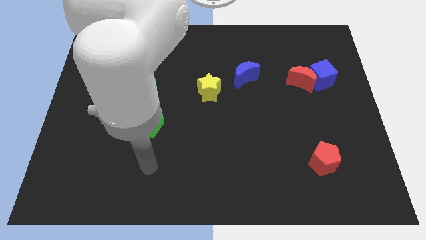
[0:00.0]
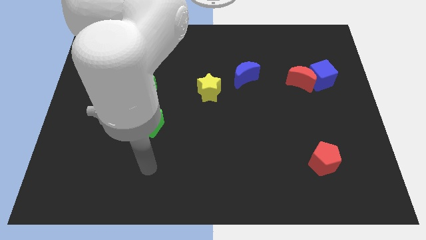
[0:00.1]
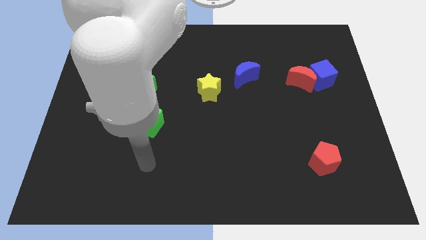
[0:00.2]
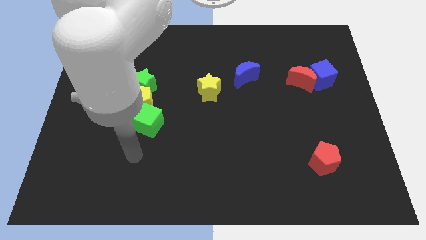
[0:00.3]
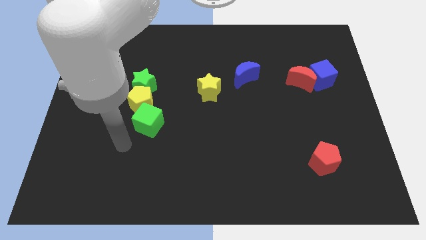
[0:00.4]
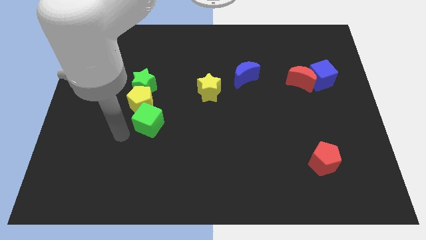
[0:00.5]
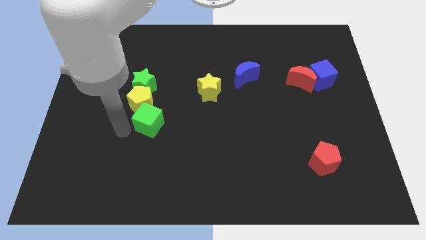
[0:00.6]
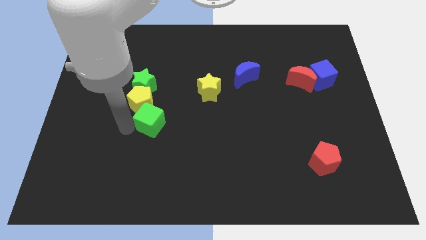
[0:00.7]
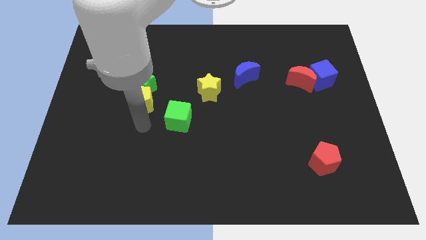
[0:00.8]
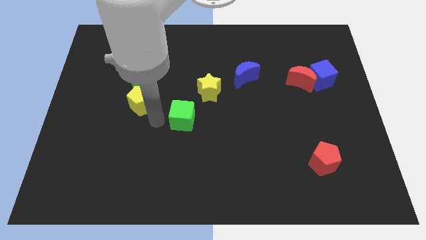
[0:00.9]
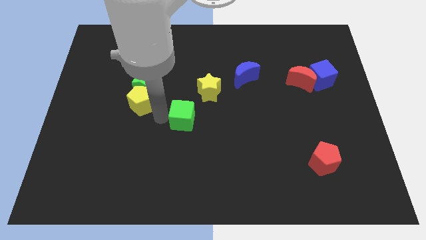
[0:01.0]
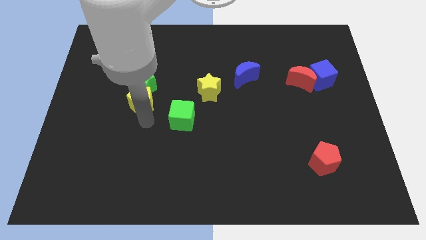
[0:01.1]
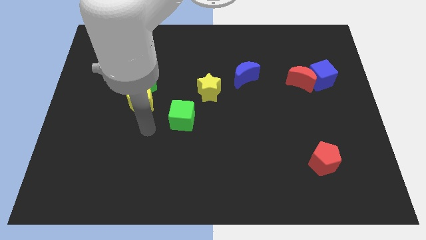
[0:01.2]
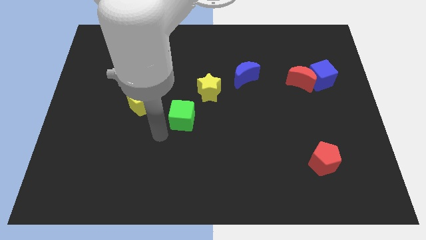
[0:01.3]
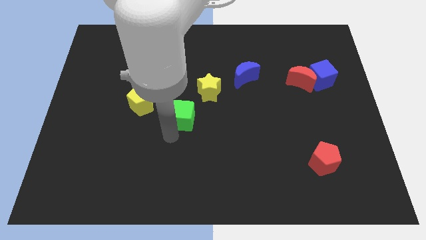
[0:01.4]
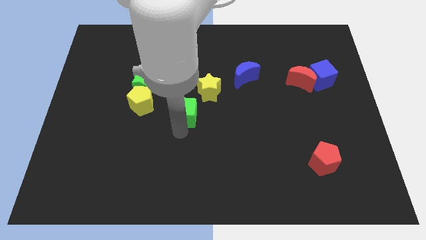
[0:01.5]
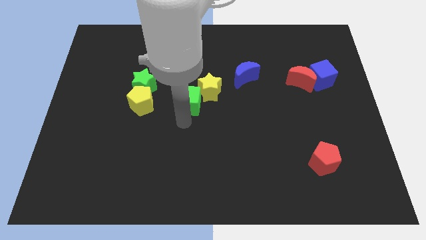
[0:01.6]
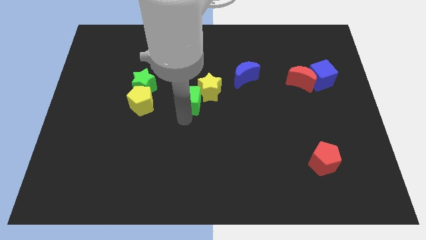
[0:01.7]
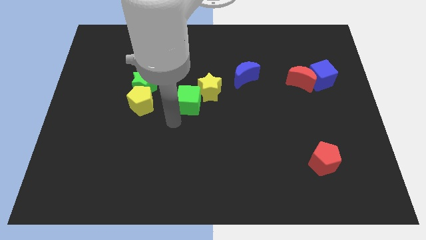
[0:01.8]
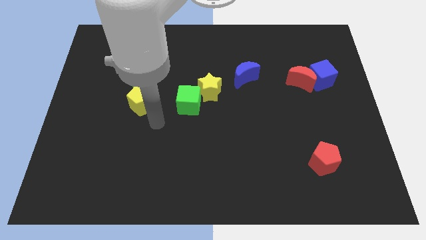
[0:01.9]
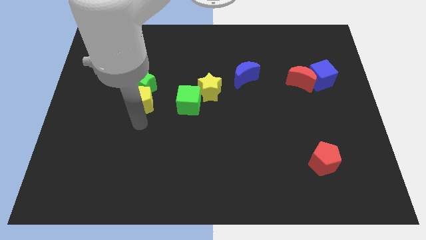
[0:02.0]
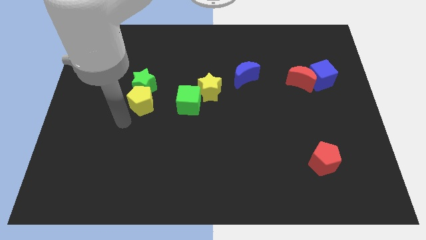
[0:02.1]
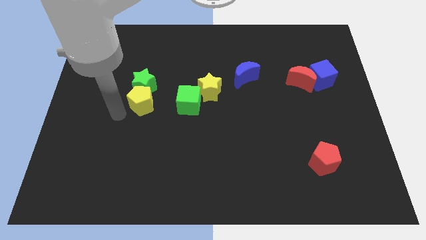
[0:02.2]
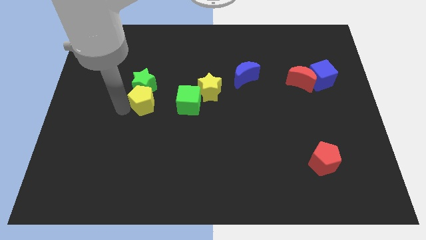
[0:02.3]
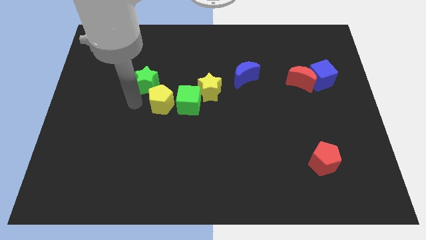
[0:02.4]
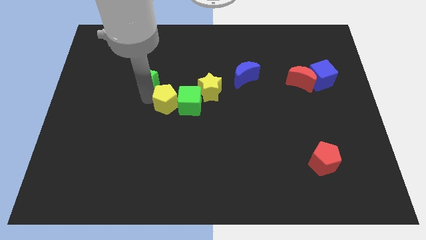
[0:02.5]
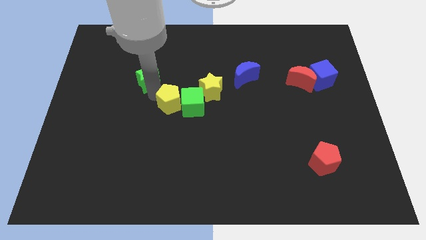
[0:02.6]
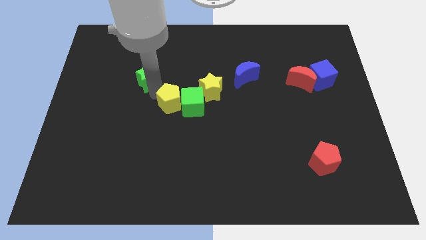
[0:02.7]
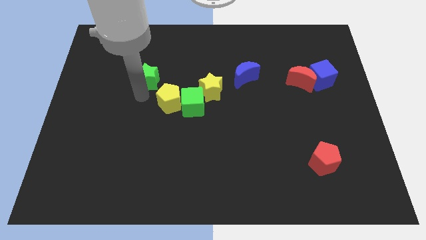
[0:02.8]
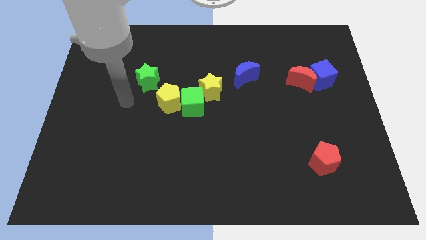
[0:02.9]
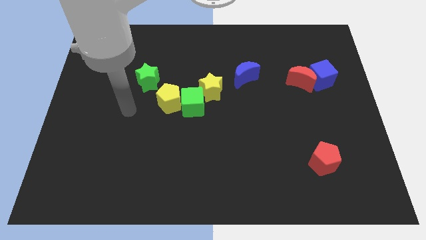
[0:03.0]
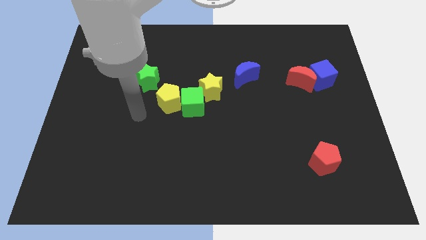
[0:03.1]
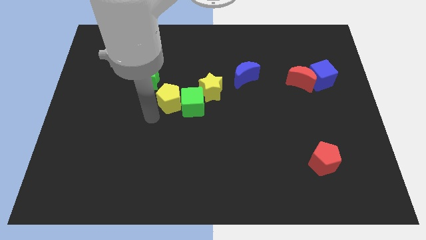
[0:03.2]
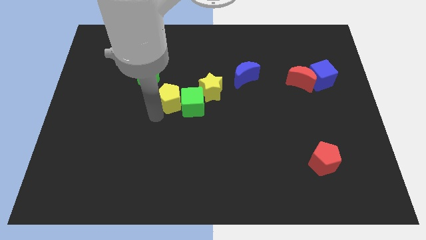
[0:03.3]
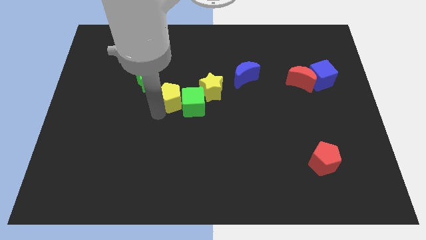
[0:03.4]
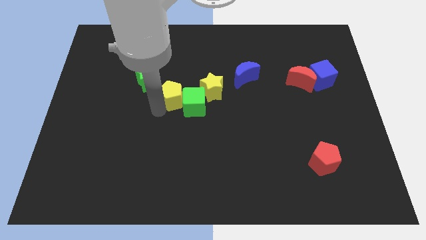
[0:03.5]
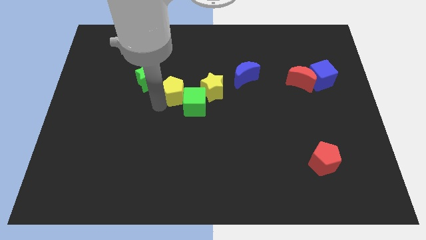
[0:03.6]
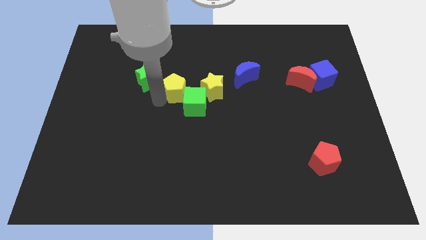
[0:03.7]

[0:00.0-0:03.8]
move green cube and yellow pentagon near yellow star

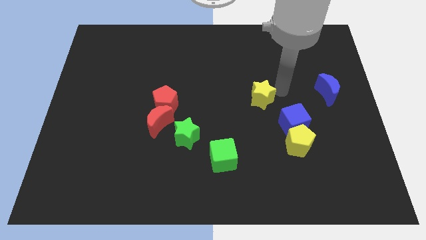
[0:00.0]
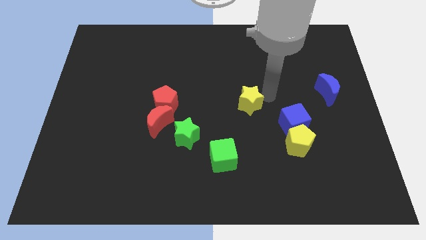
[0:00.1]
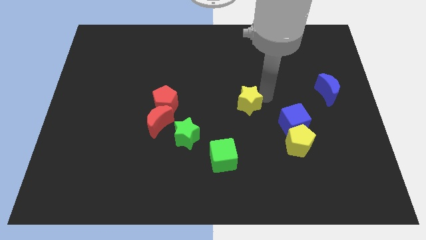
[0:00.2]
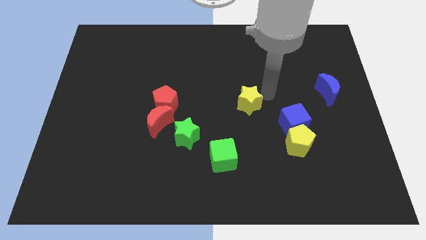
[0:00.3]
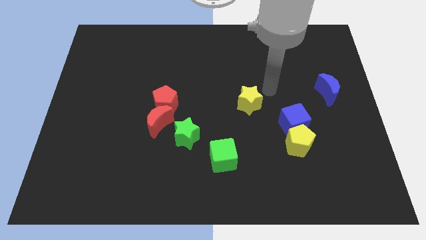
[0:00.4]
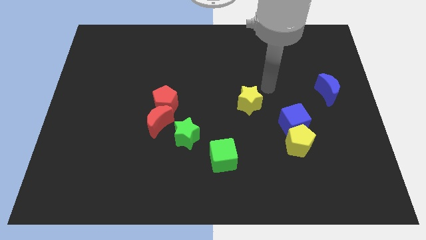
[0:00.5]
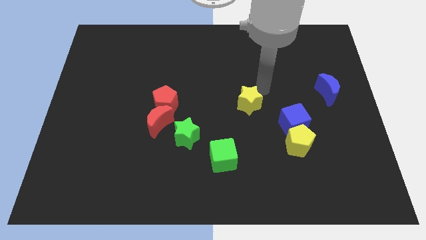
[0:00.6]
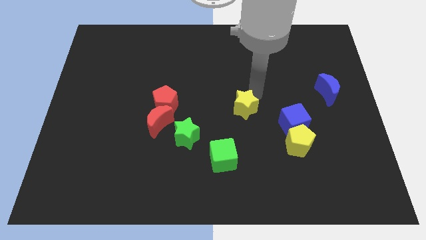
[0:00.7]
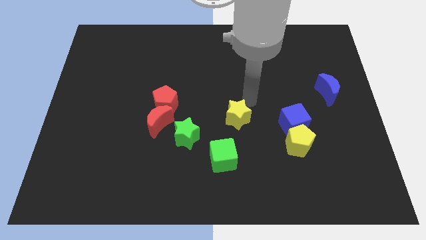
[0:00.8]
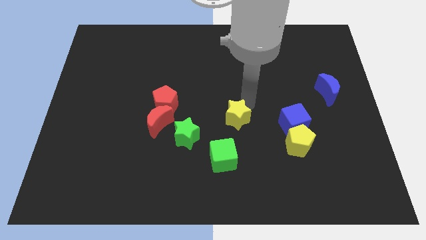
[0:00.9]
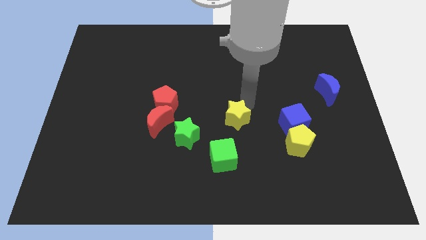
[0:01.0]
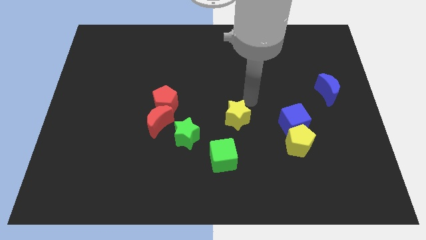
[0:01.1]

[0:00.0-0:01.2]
push the yellow star slightly downward

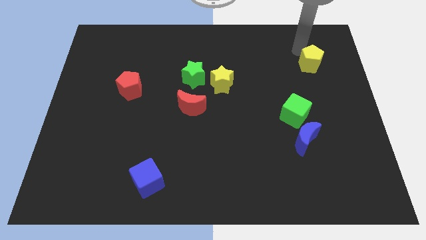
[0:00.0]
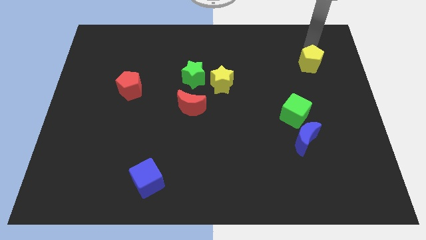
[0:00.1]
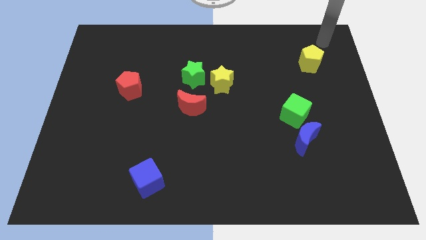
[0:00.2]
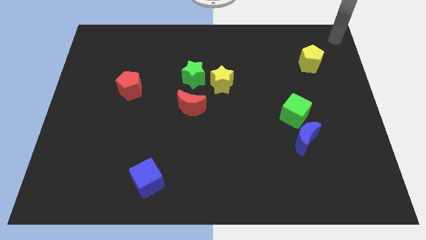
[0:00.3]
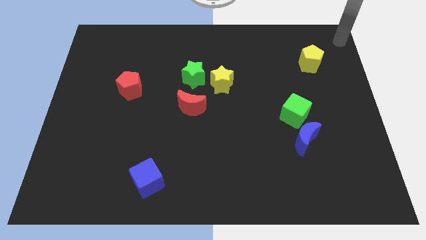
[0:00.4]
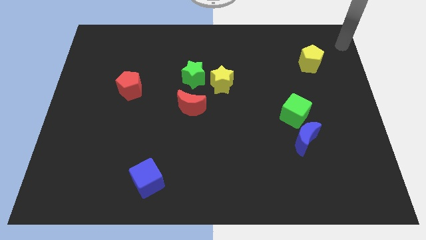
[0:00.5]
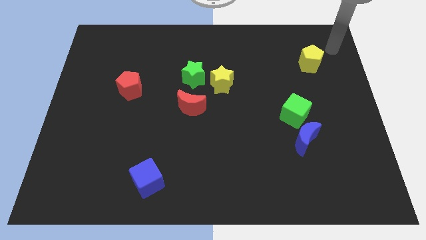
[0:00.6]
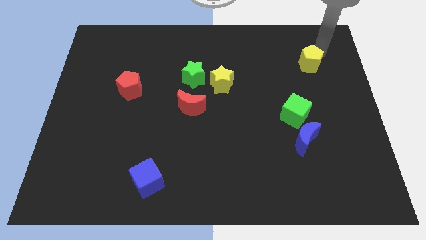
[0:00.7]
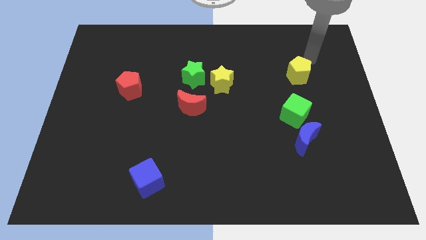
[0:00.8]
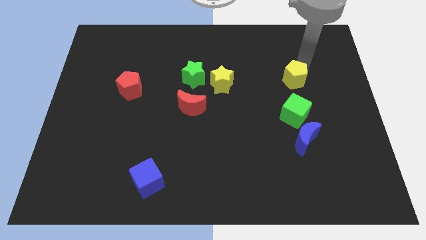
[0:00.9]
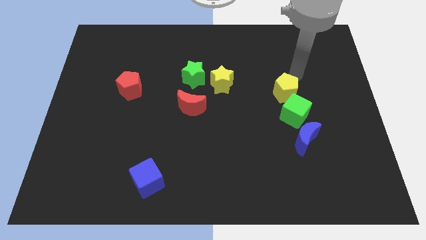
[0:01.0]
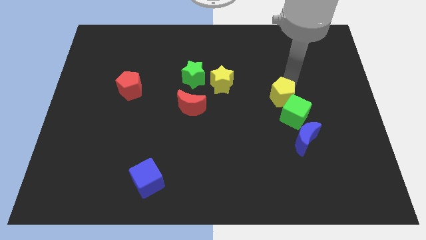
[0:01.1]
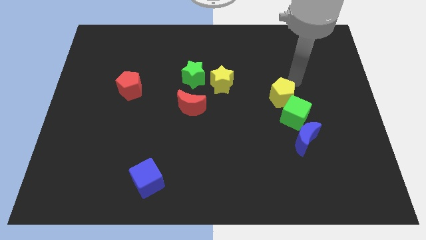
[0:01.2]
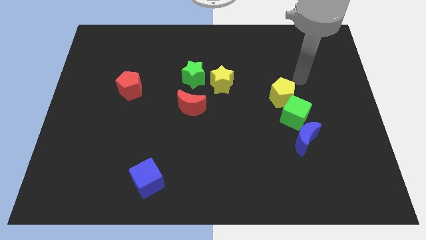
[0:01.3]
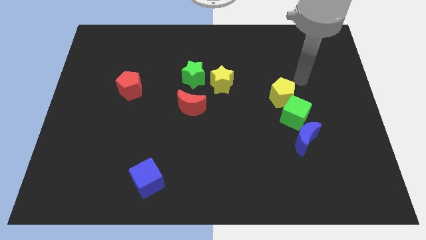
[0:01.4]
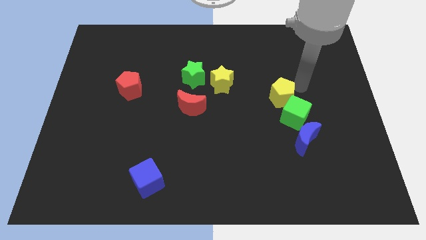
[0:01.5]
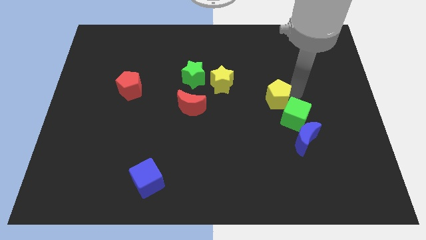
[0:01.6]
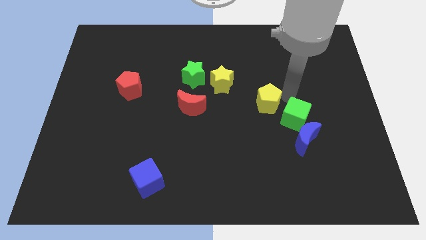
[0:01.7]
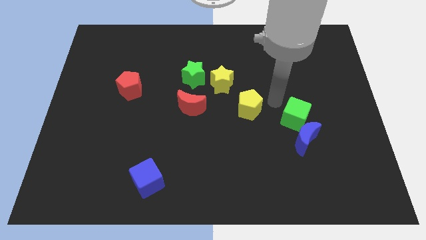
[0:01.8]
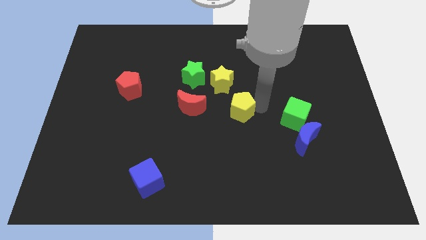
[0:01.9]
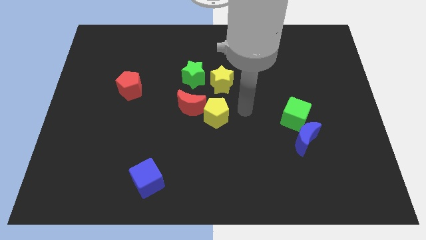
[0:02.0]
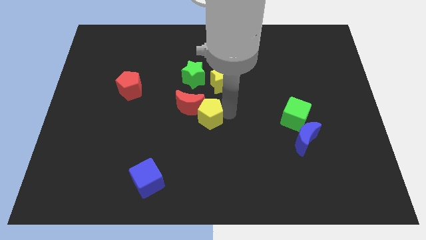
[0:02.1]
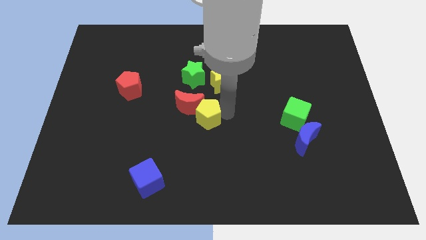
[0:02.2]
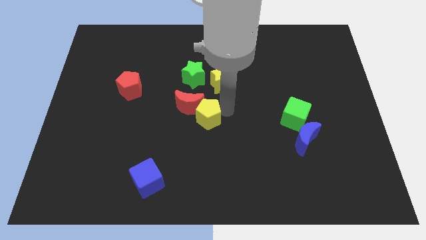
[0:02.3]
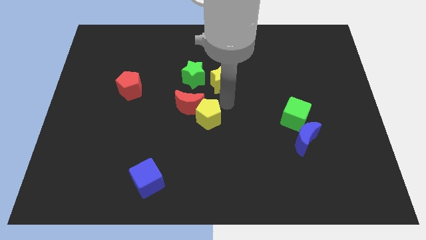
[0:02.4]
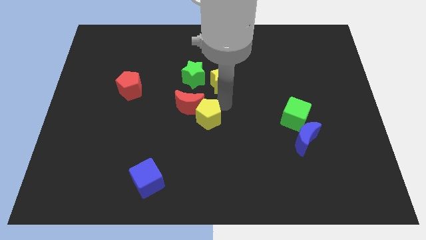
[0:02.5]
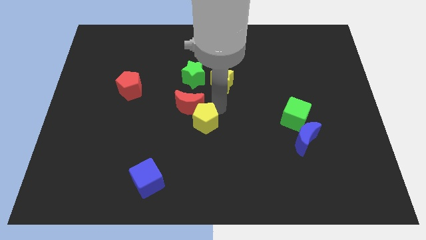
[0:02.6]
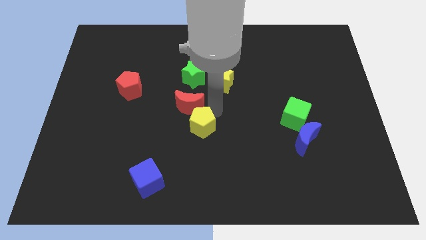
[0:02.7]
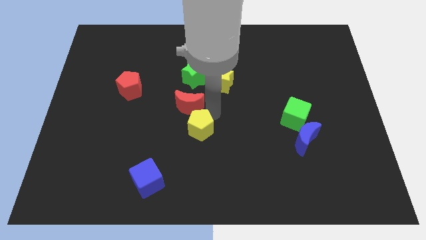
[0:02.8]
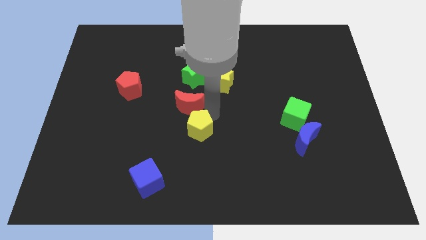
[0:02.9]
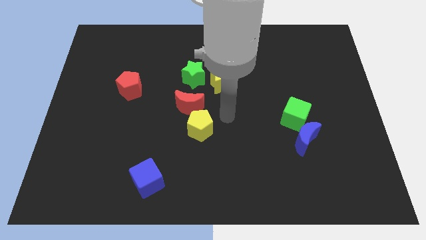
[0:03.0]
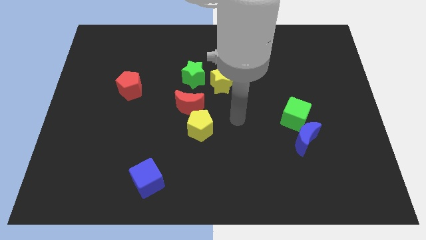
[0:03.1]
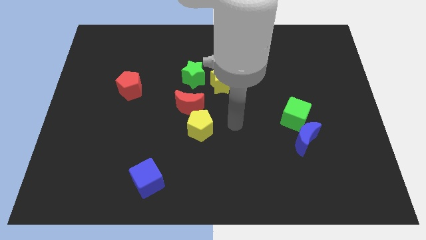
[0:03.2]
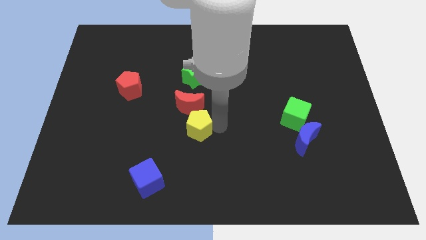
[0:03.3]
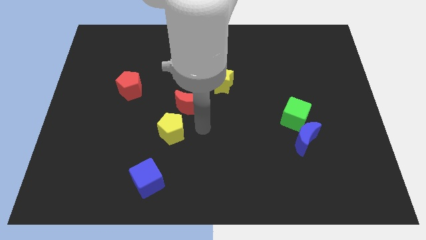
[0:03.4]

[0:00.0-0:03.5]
move the yellow pentagon to the bottom right of the red crescent

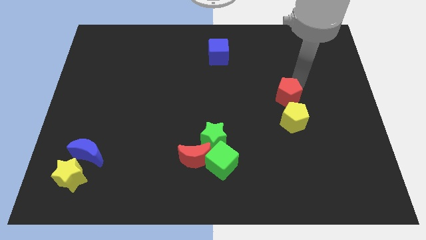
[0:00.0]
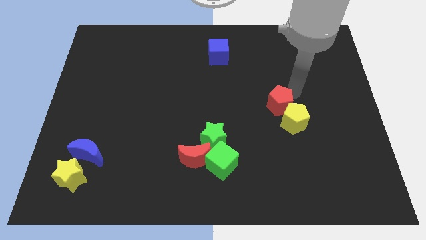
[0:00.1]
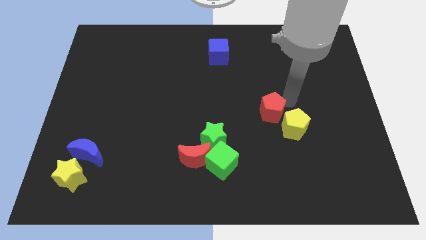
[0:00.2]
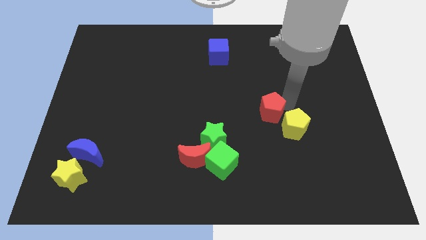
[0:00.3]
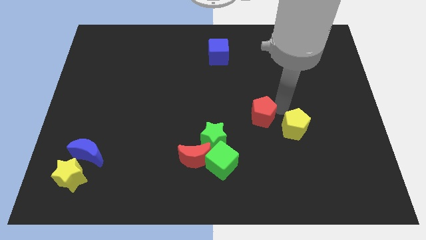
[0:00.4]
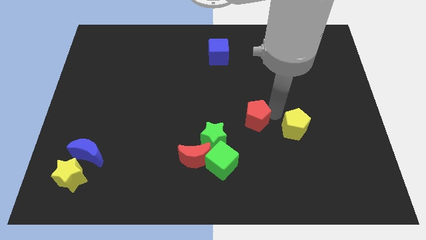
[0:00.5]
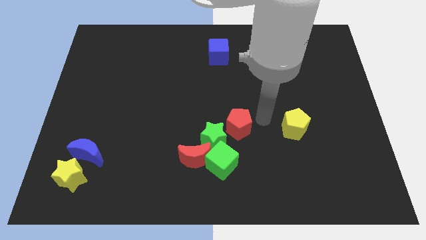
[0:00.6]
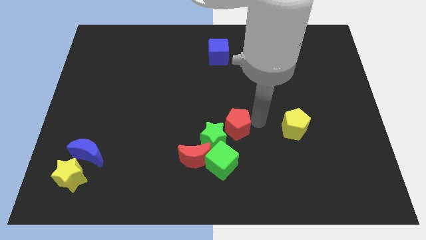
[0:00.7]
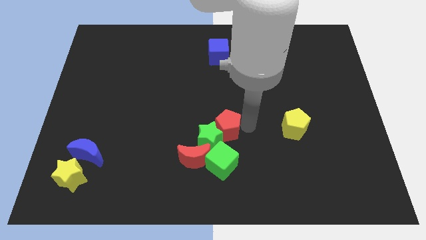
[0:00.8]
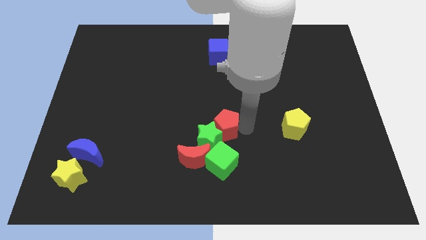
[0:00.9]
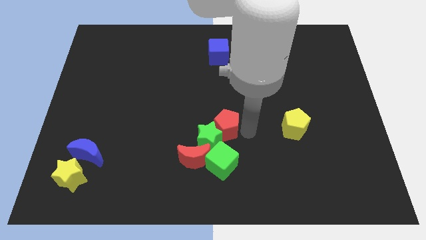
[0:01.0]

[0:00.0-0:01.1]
push the red pentagon to the top right of the green star
